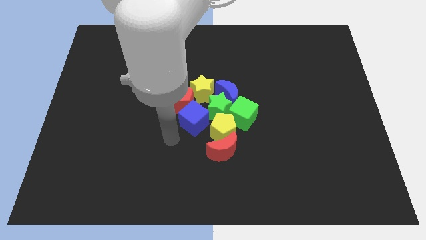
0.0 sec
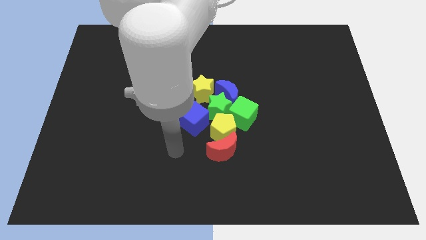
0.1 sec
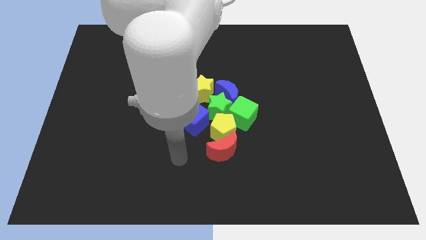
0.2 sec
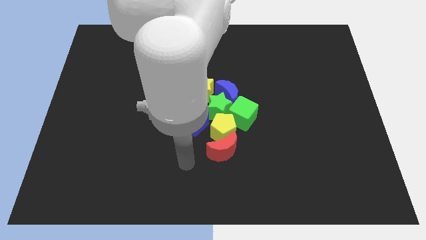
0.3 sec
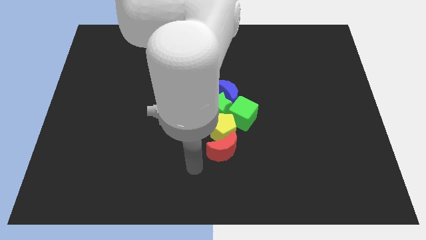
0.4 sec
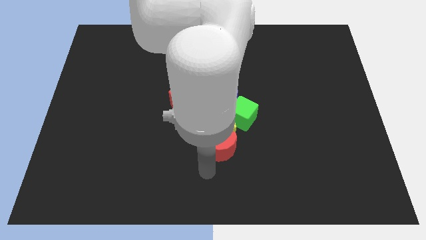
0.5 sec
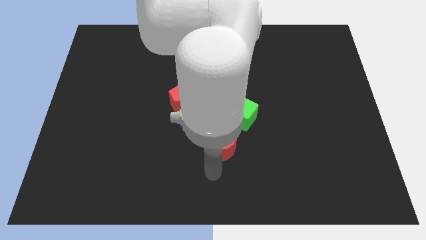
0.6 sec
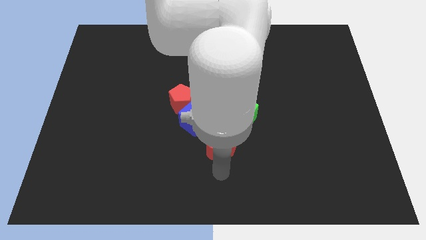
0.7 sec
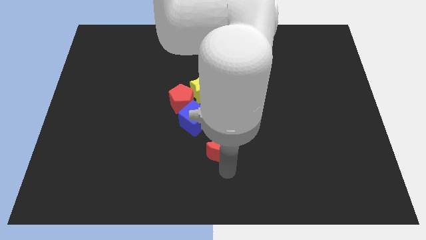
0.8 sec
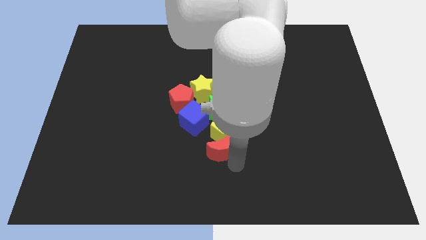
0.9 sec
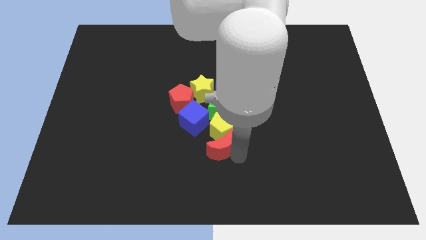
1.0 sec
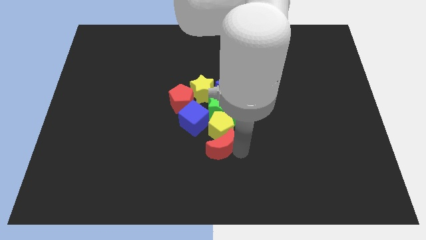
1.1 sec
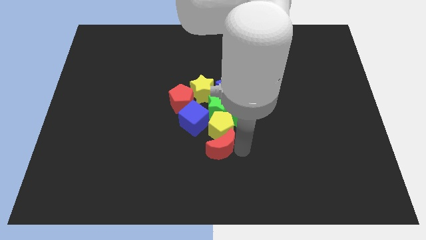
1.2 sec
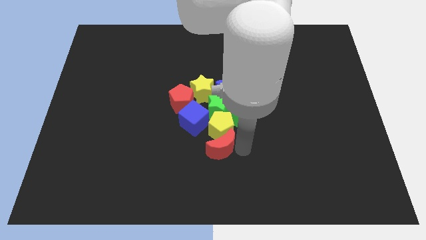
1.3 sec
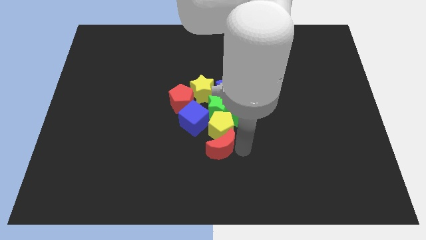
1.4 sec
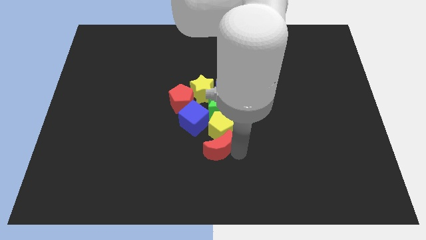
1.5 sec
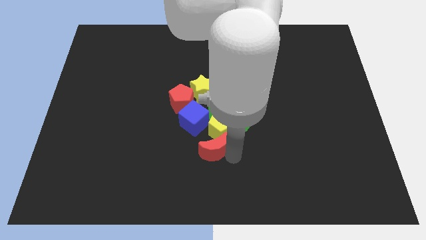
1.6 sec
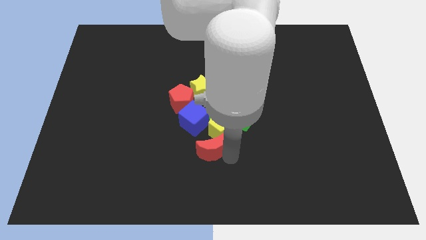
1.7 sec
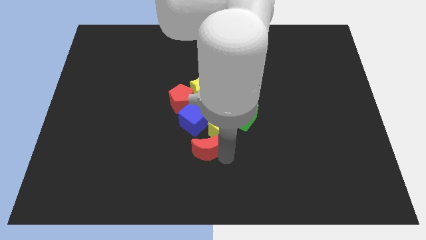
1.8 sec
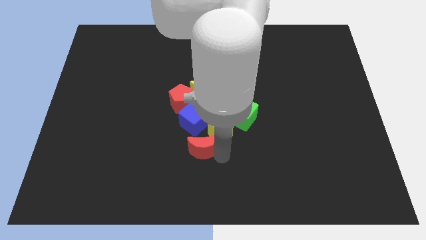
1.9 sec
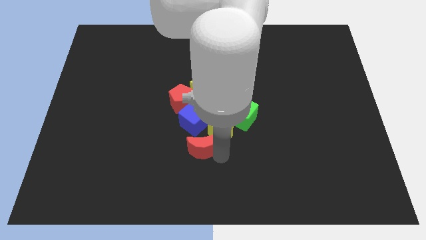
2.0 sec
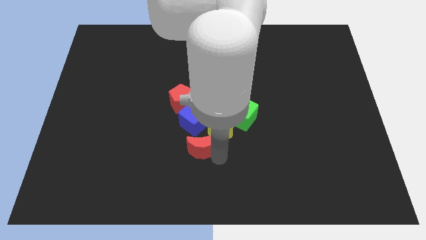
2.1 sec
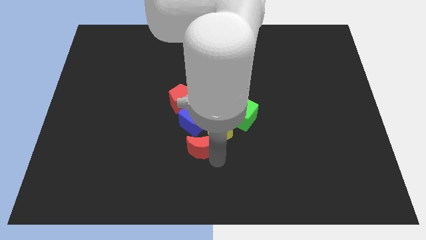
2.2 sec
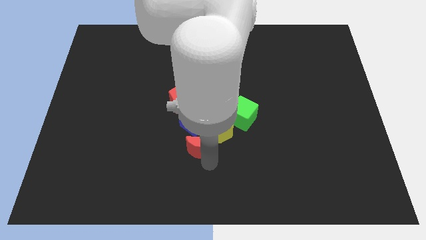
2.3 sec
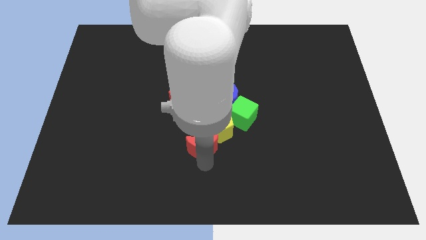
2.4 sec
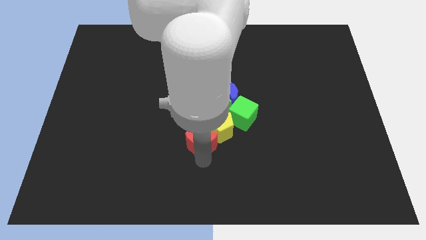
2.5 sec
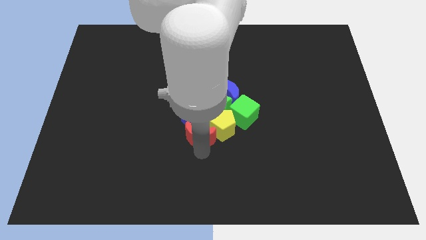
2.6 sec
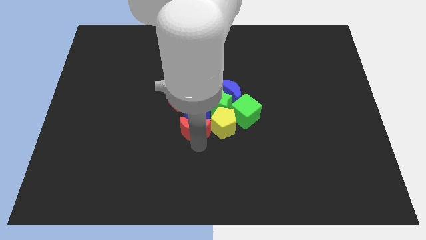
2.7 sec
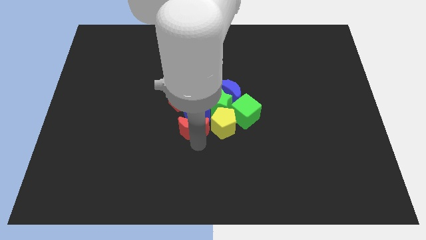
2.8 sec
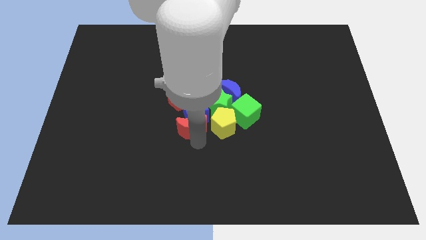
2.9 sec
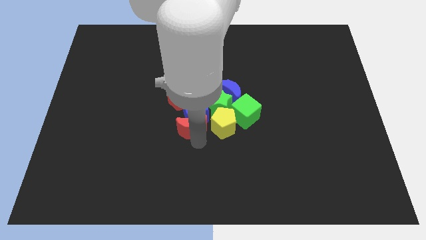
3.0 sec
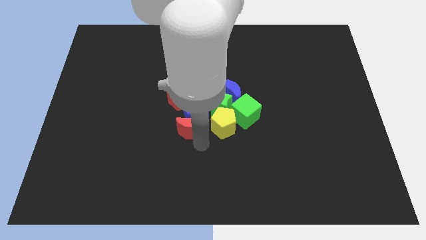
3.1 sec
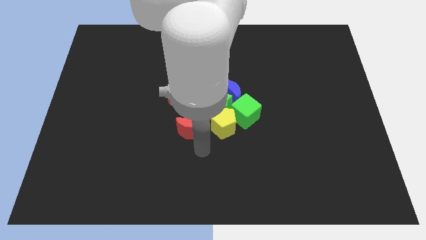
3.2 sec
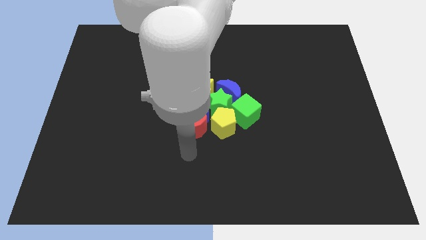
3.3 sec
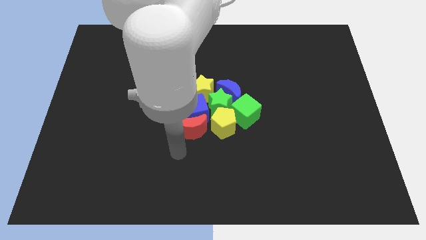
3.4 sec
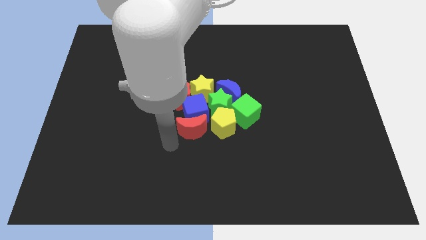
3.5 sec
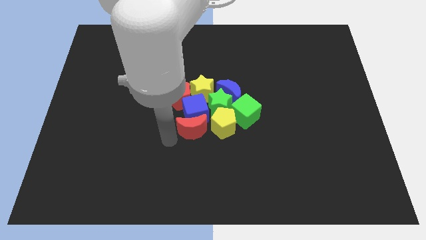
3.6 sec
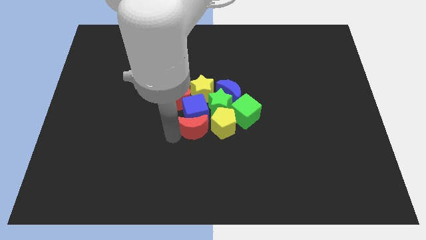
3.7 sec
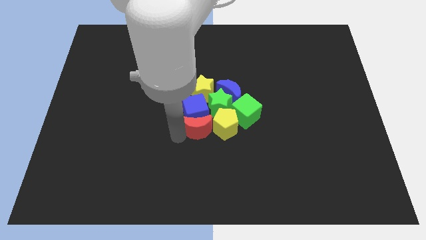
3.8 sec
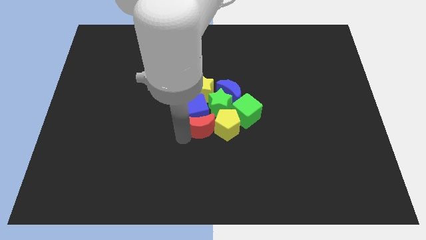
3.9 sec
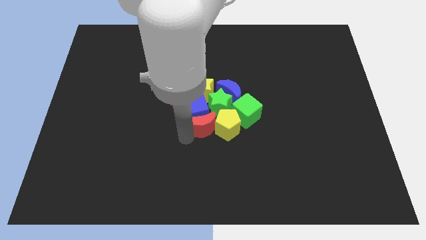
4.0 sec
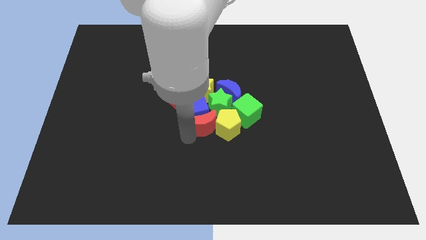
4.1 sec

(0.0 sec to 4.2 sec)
add the red crescent into the group of blocks

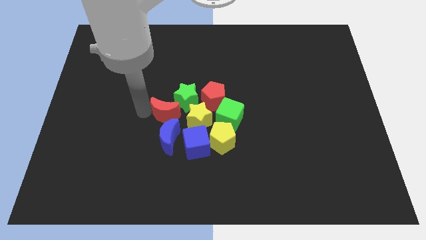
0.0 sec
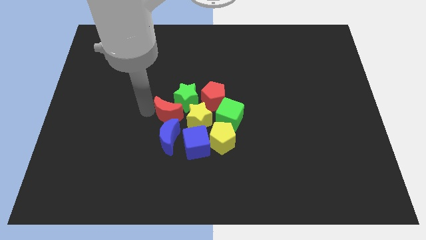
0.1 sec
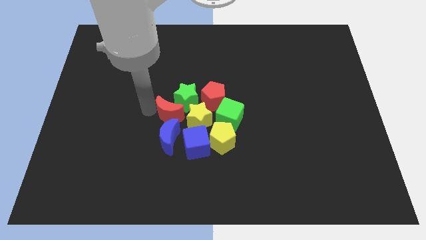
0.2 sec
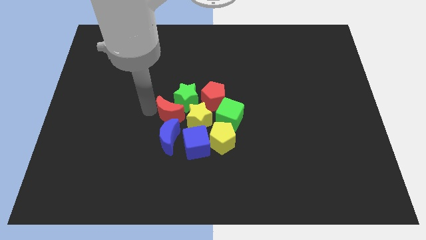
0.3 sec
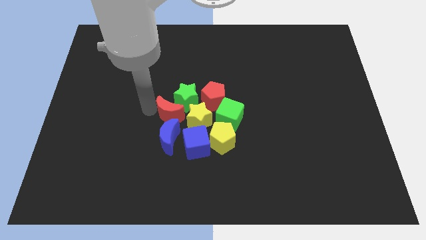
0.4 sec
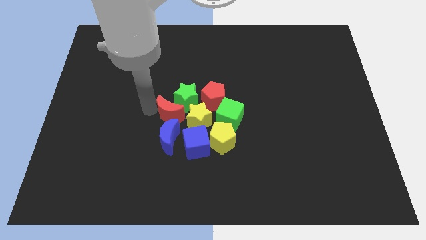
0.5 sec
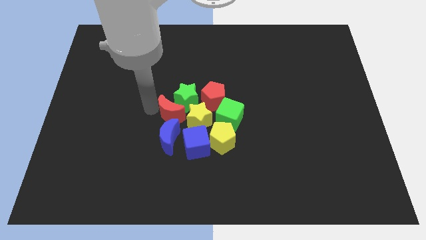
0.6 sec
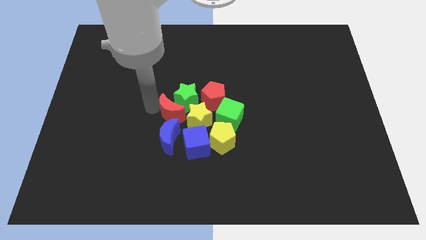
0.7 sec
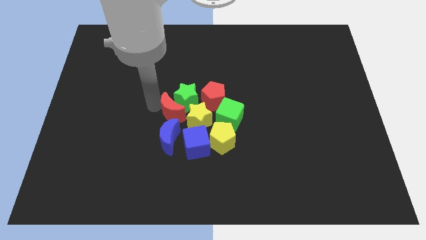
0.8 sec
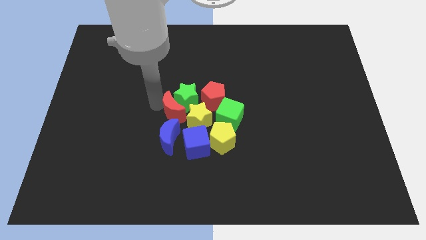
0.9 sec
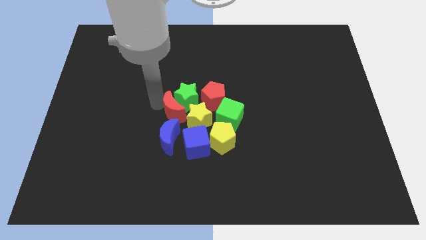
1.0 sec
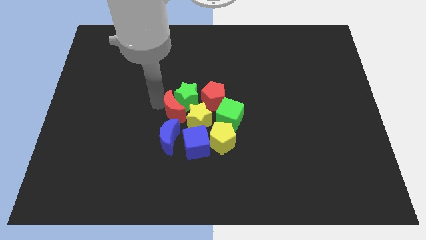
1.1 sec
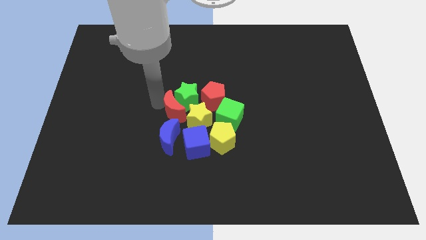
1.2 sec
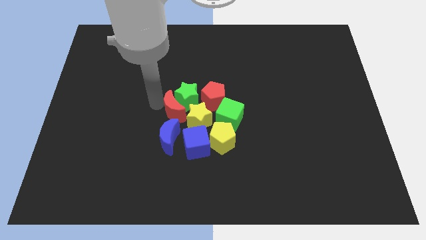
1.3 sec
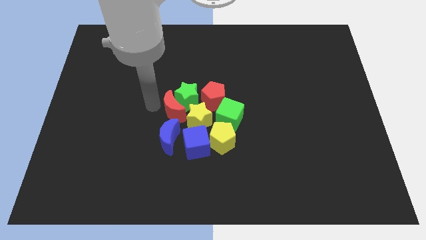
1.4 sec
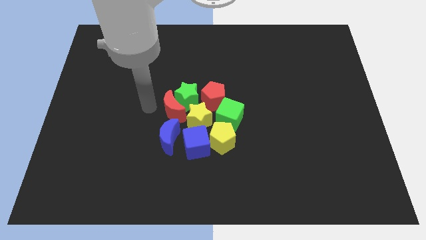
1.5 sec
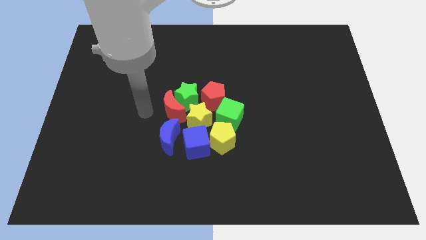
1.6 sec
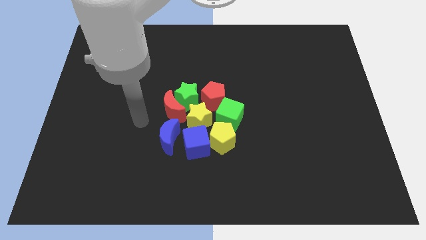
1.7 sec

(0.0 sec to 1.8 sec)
move the red crescent slightly towards green star

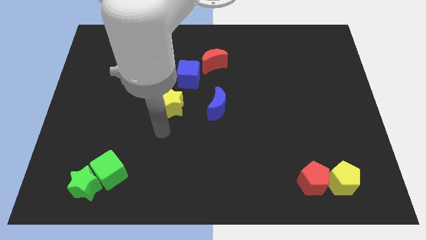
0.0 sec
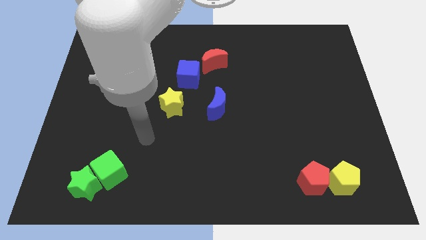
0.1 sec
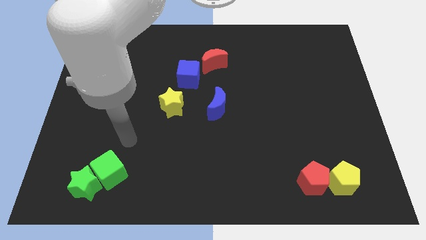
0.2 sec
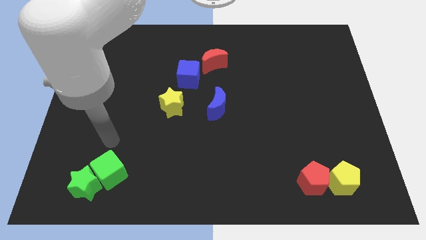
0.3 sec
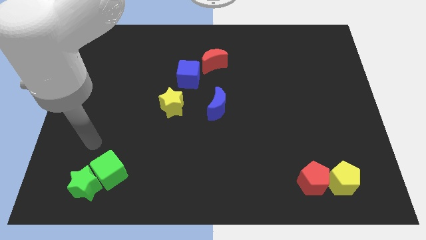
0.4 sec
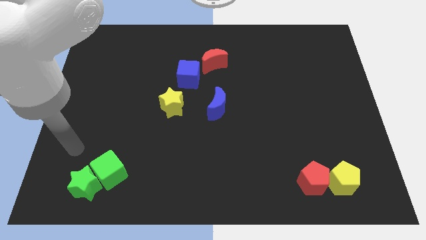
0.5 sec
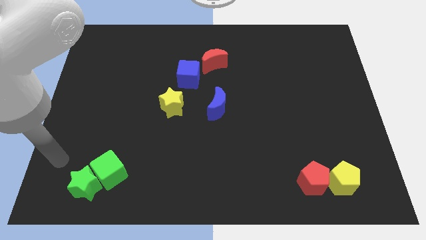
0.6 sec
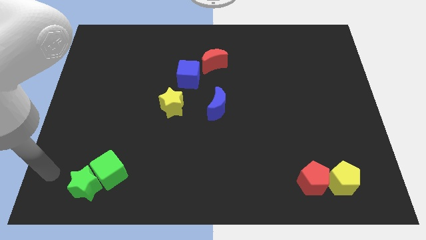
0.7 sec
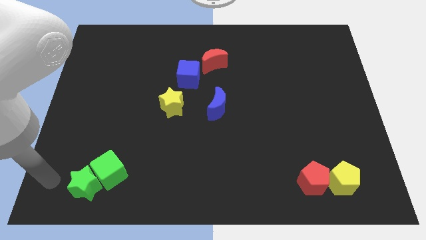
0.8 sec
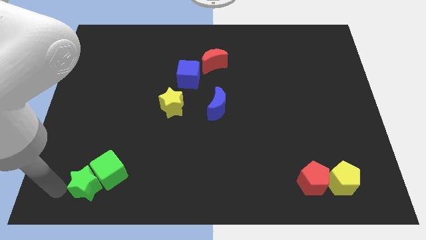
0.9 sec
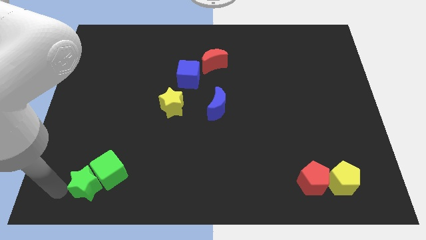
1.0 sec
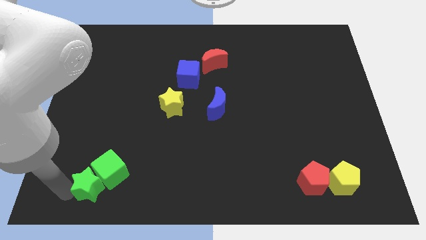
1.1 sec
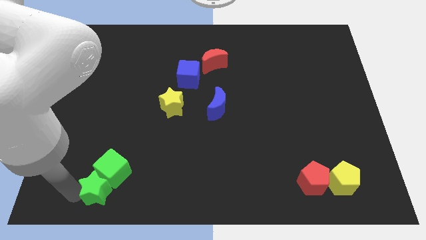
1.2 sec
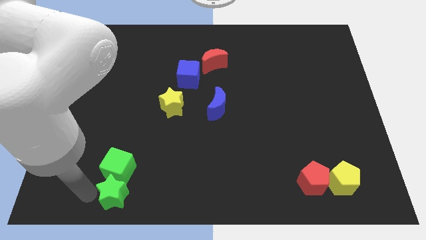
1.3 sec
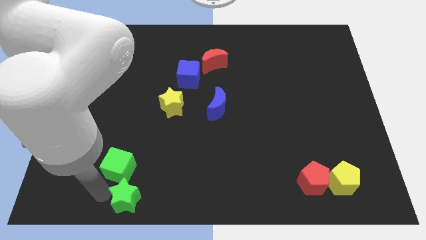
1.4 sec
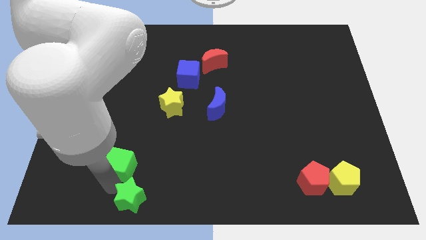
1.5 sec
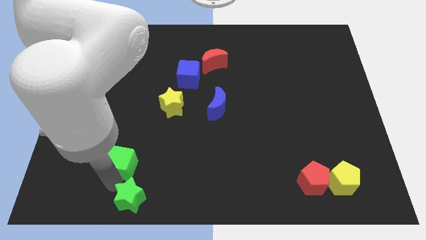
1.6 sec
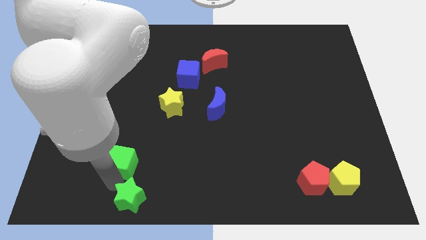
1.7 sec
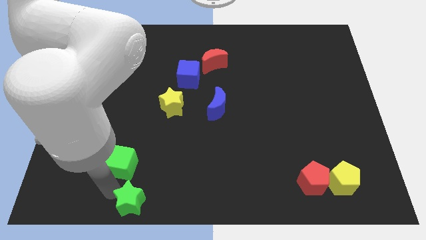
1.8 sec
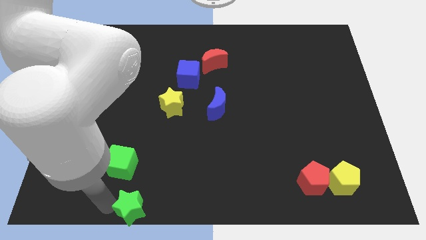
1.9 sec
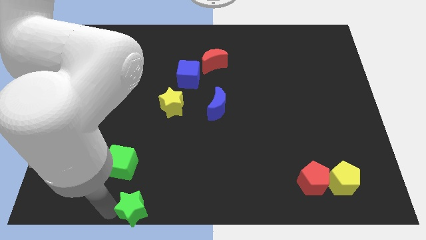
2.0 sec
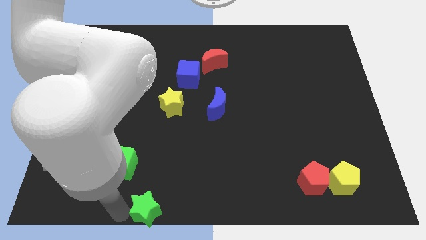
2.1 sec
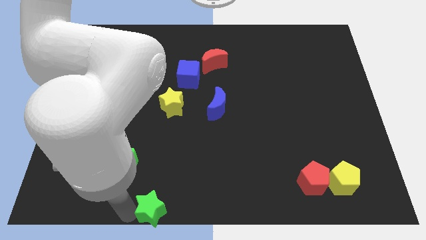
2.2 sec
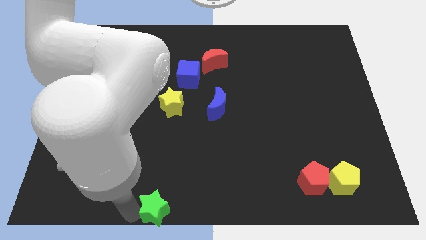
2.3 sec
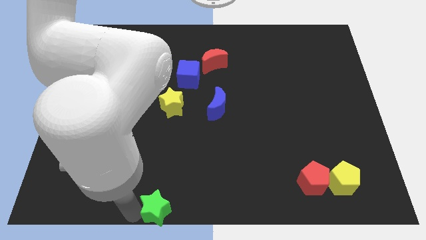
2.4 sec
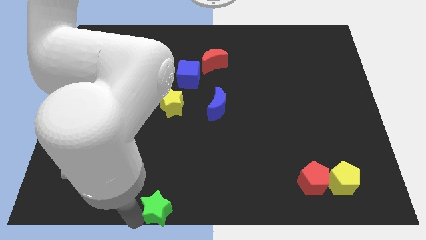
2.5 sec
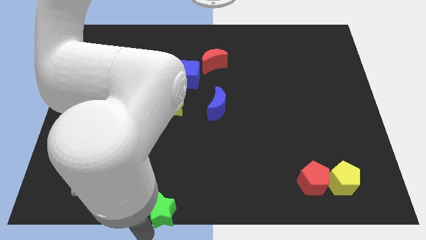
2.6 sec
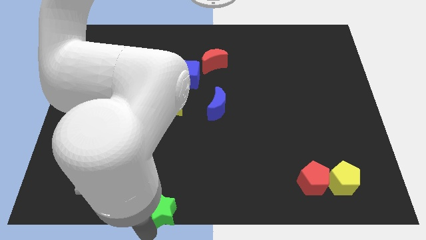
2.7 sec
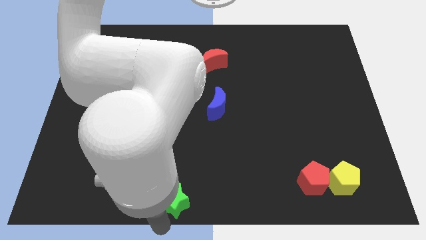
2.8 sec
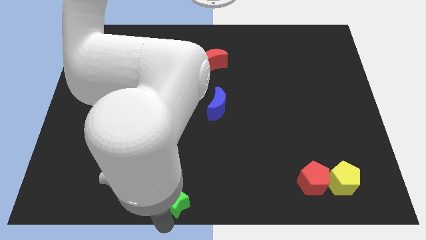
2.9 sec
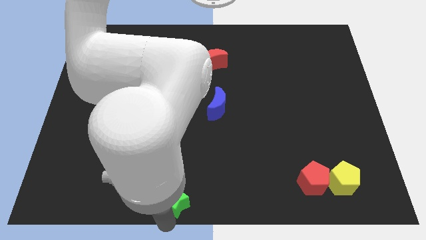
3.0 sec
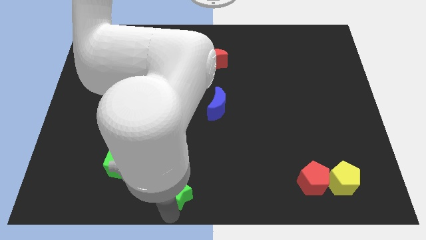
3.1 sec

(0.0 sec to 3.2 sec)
separate the green star from the green cube
